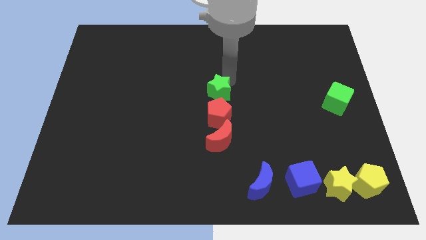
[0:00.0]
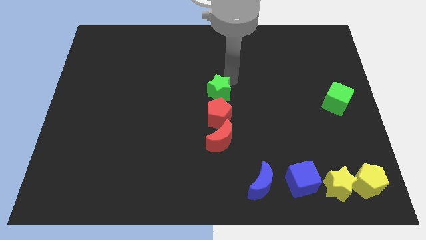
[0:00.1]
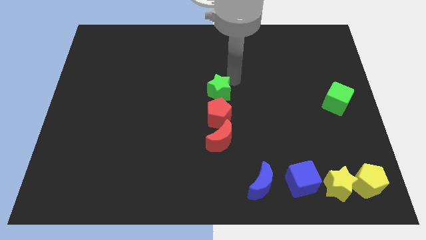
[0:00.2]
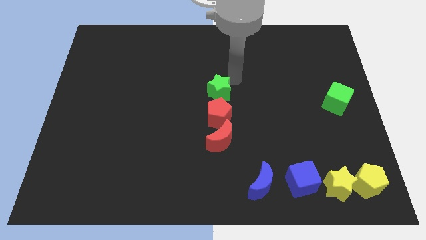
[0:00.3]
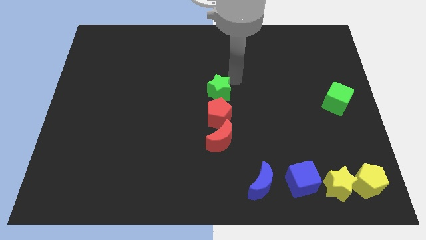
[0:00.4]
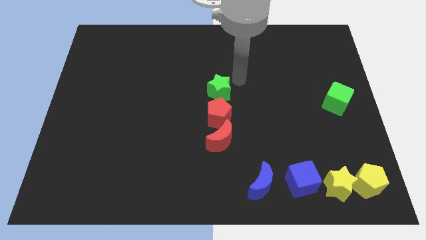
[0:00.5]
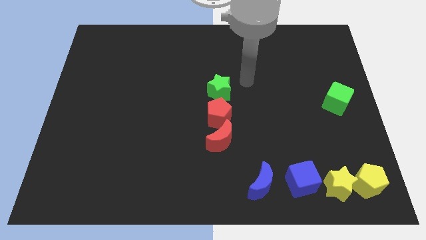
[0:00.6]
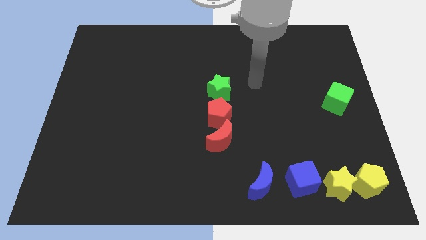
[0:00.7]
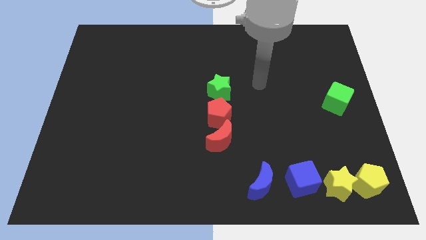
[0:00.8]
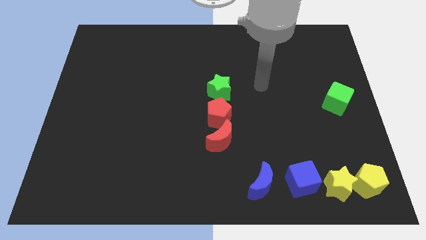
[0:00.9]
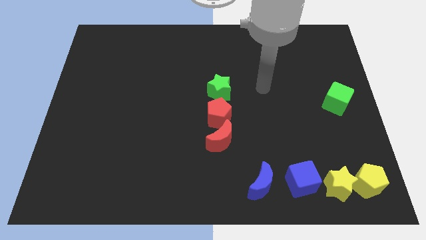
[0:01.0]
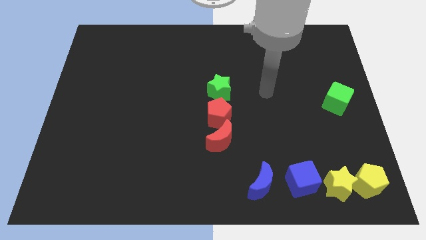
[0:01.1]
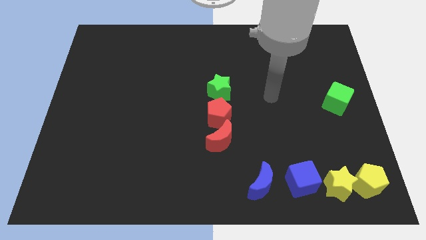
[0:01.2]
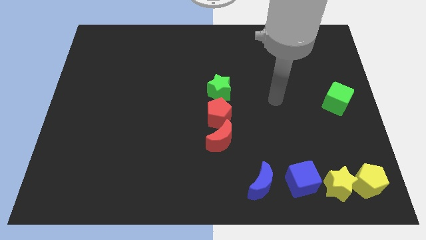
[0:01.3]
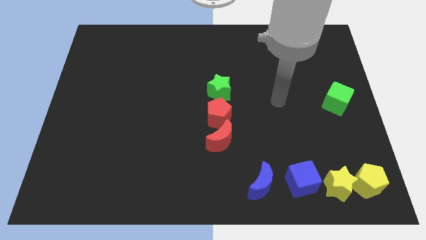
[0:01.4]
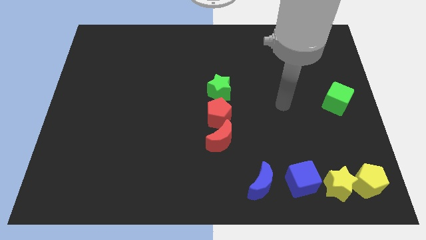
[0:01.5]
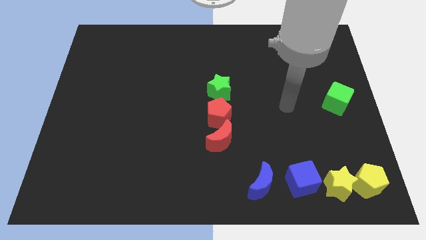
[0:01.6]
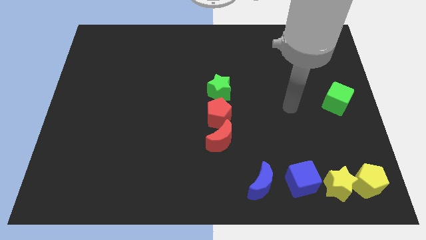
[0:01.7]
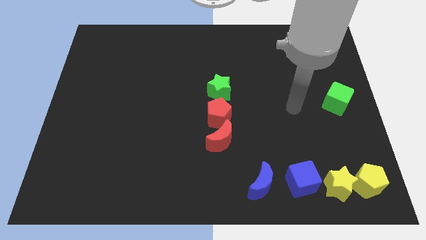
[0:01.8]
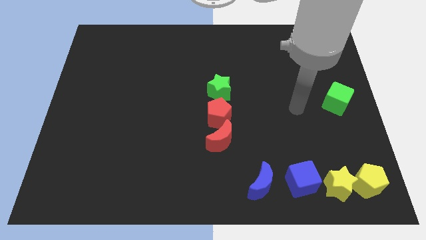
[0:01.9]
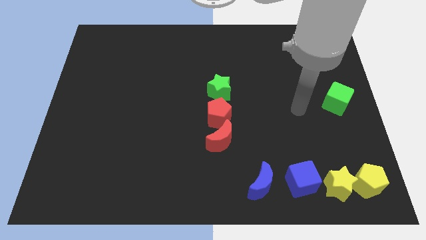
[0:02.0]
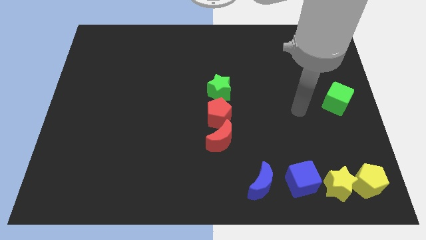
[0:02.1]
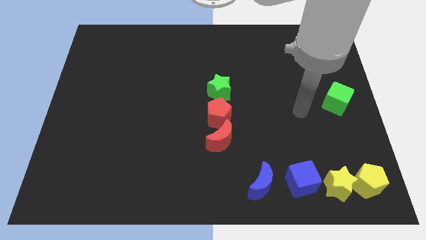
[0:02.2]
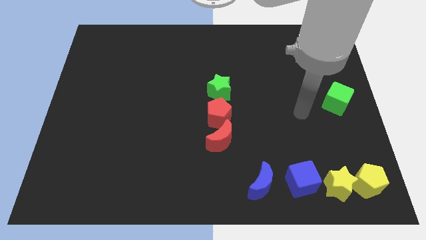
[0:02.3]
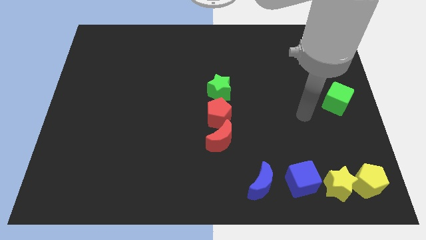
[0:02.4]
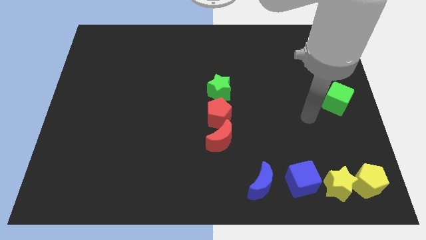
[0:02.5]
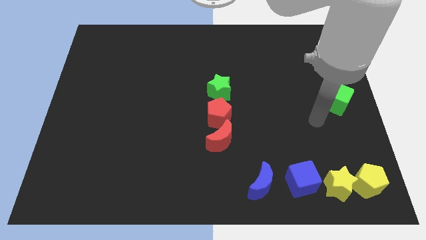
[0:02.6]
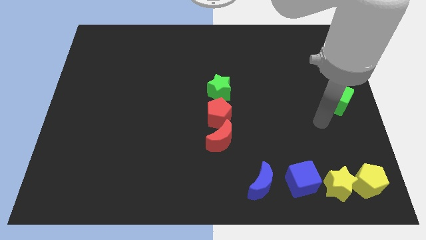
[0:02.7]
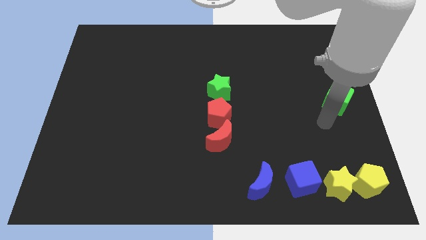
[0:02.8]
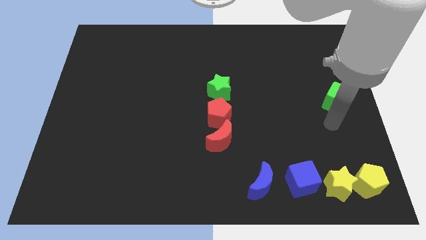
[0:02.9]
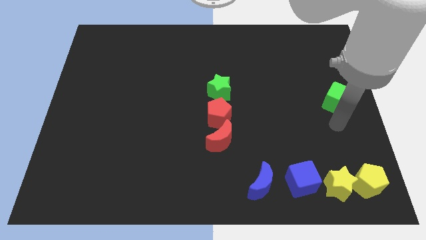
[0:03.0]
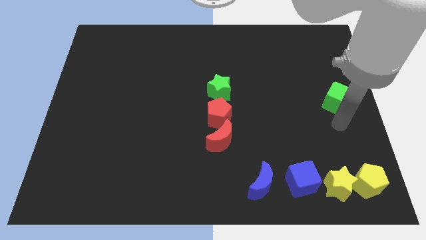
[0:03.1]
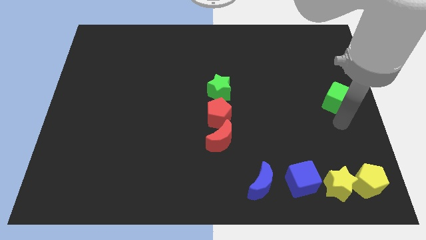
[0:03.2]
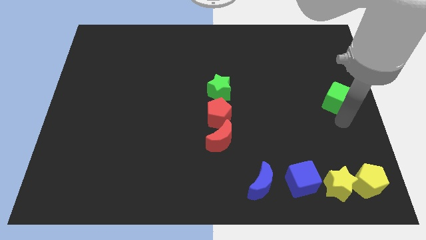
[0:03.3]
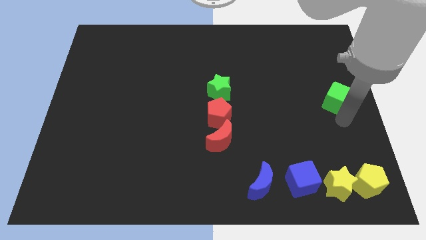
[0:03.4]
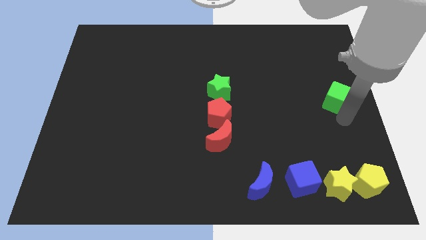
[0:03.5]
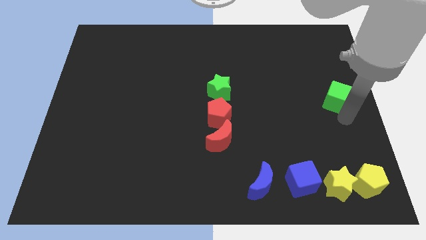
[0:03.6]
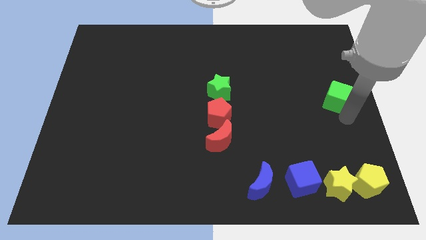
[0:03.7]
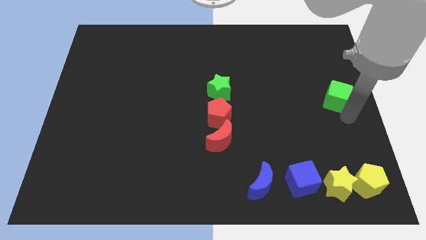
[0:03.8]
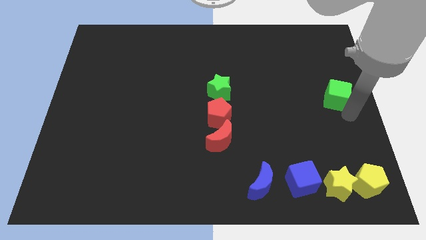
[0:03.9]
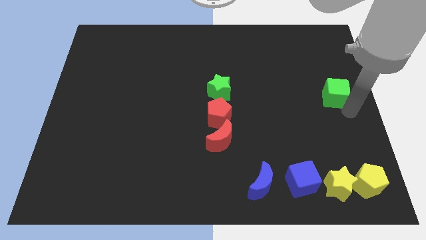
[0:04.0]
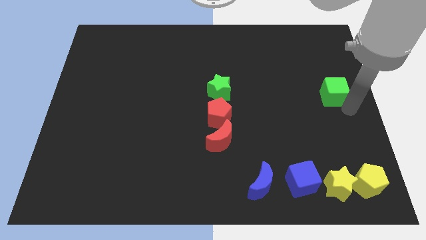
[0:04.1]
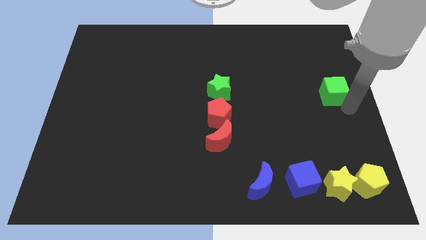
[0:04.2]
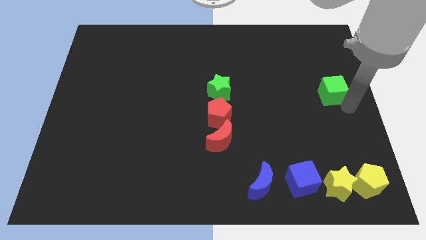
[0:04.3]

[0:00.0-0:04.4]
place the green cube parallel to the green star

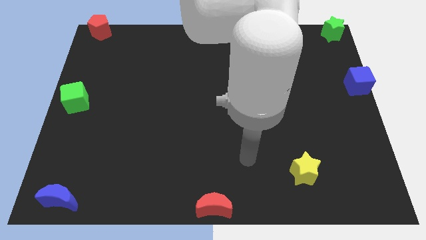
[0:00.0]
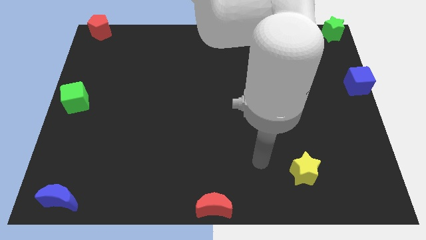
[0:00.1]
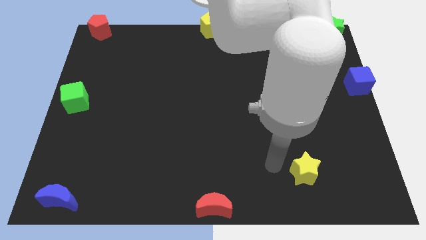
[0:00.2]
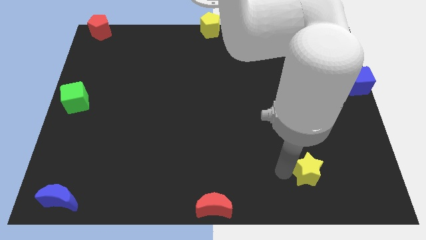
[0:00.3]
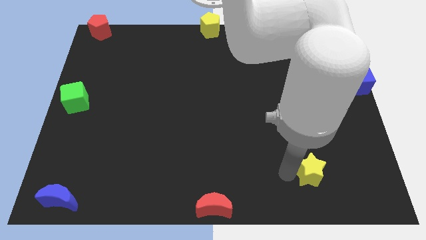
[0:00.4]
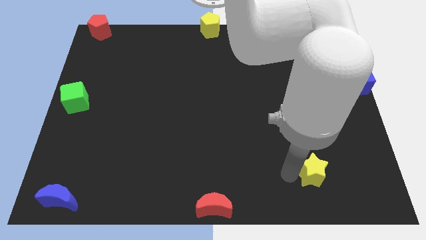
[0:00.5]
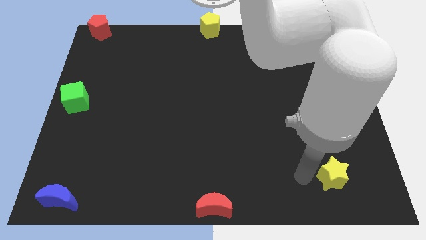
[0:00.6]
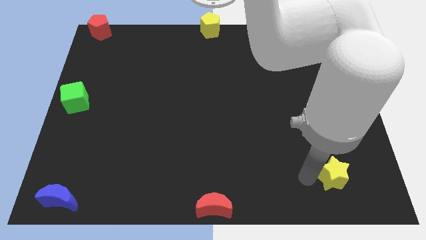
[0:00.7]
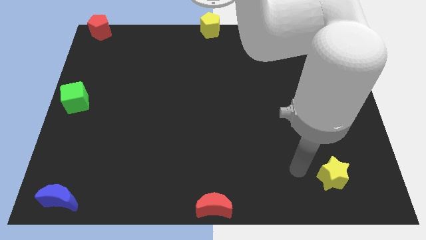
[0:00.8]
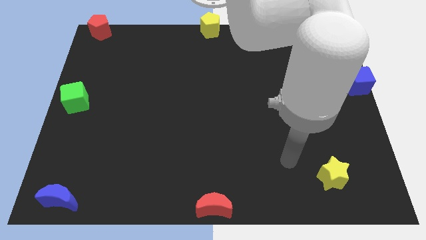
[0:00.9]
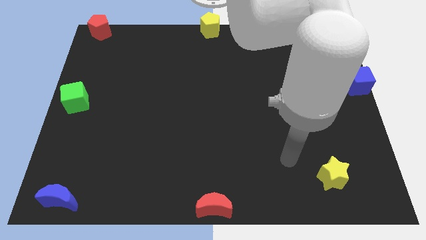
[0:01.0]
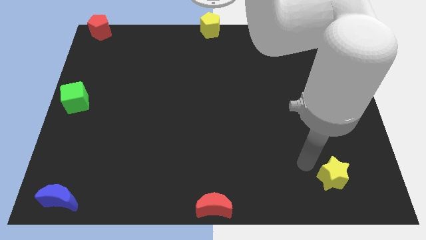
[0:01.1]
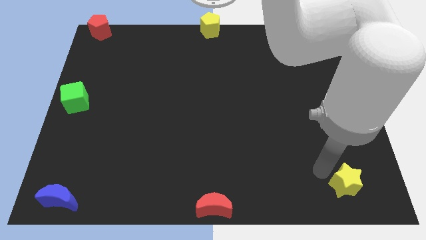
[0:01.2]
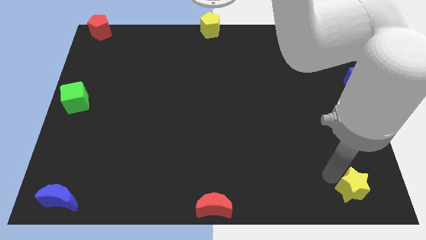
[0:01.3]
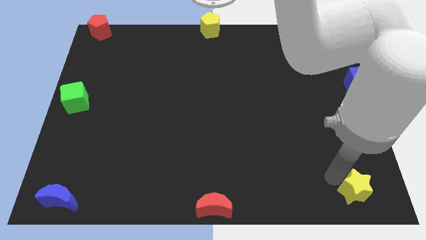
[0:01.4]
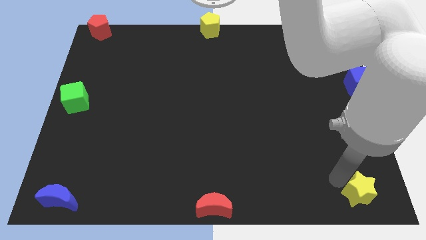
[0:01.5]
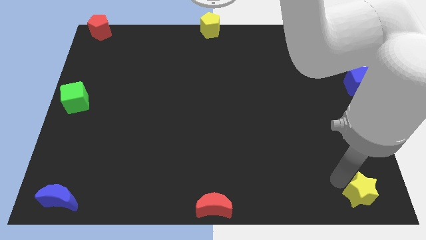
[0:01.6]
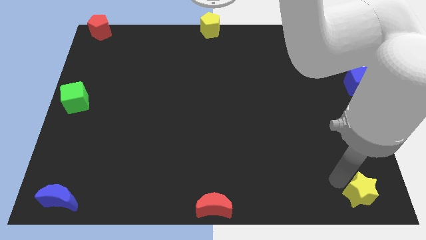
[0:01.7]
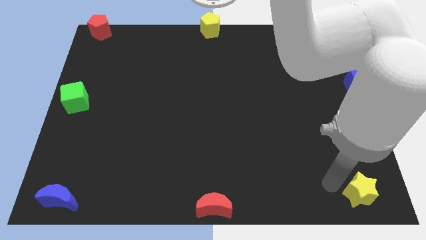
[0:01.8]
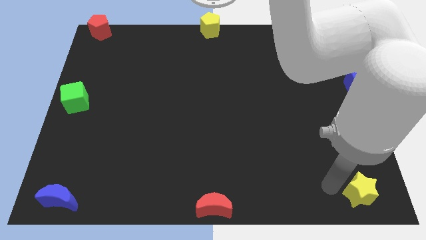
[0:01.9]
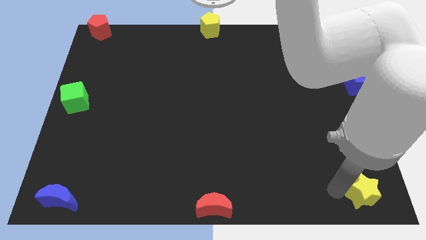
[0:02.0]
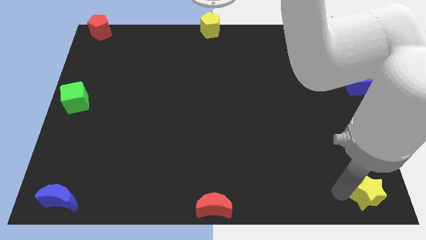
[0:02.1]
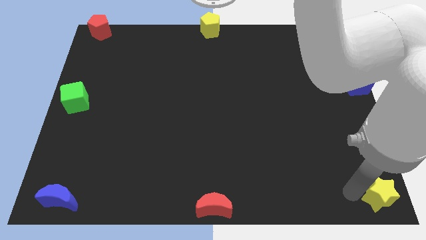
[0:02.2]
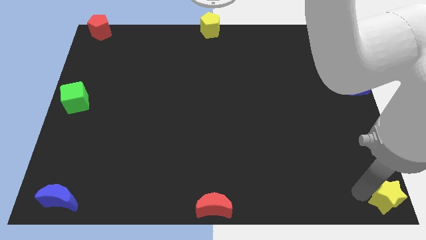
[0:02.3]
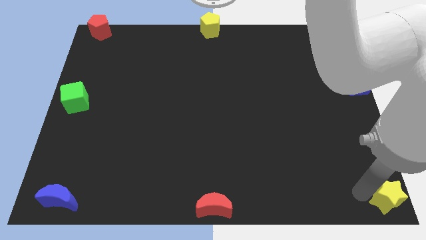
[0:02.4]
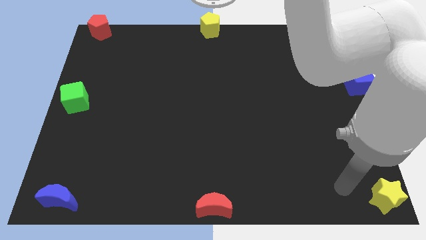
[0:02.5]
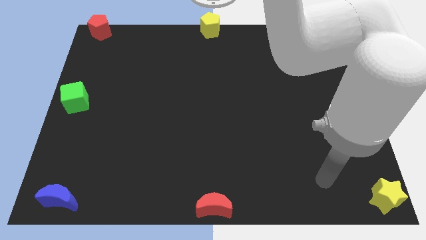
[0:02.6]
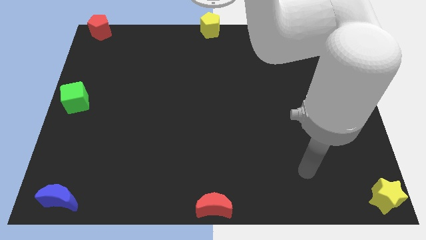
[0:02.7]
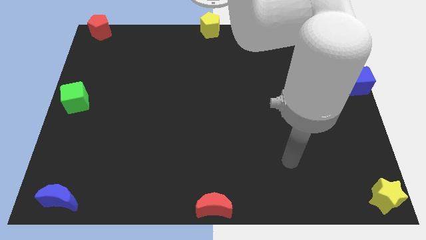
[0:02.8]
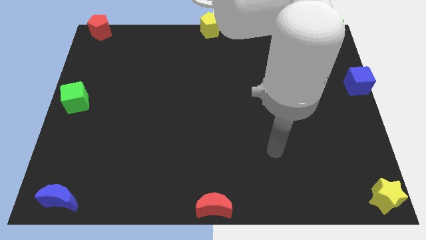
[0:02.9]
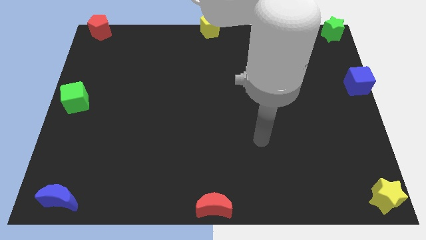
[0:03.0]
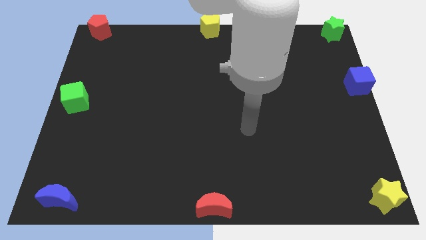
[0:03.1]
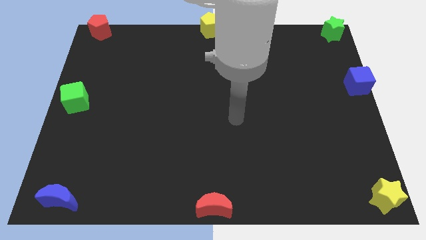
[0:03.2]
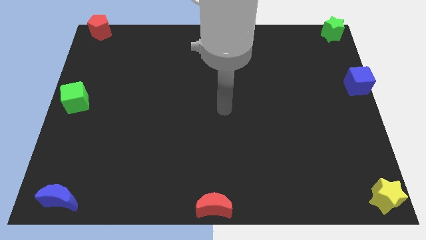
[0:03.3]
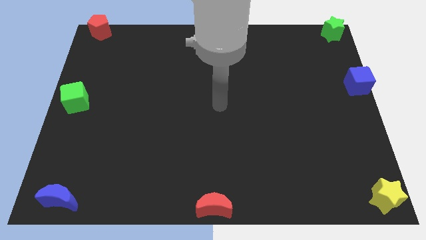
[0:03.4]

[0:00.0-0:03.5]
push the yellow star to the bottom right corner of the board

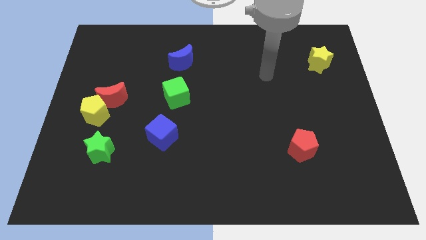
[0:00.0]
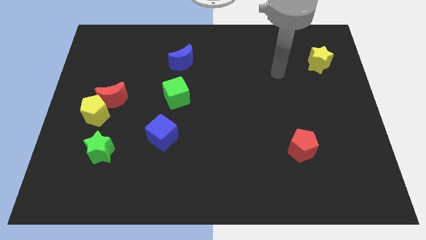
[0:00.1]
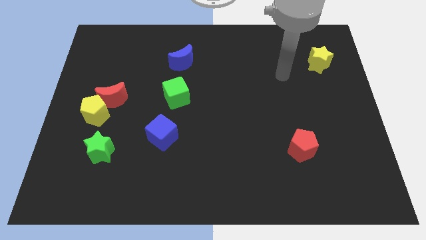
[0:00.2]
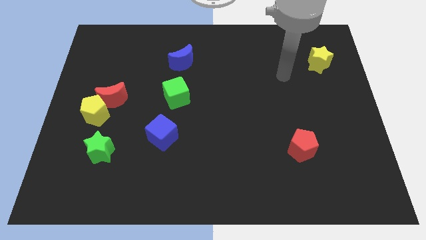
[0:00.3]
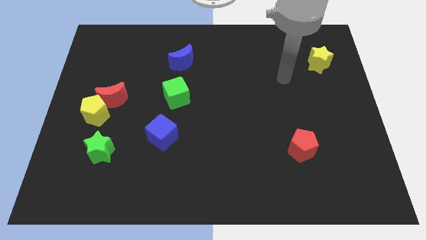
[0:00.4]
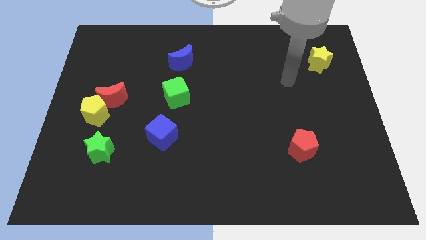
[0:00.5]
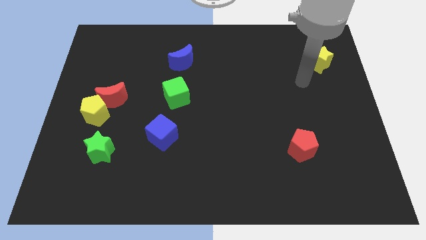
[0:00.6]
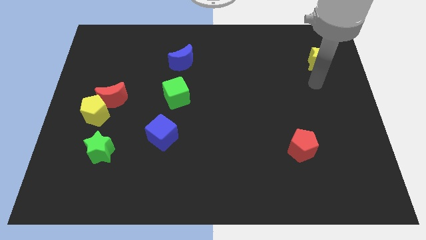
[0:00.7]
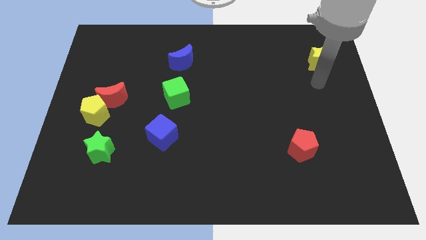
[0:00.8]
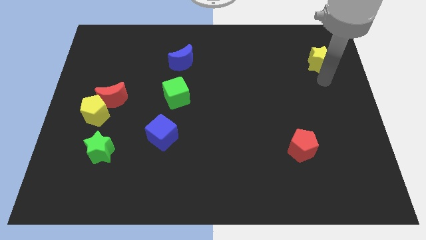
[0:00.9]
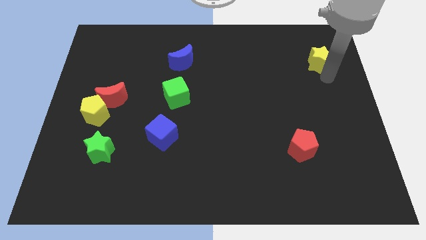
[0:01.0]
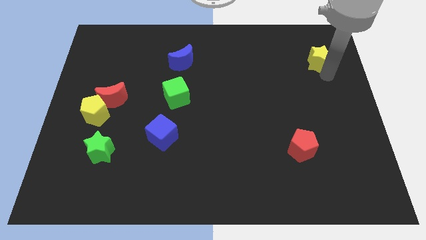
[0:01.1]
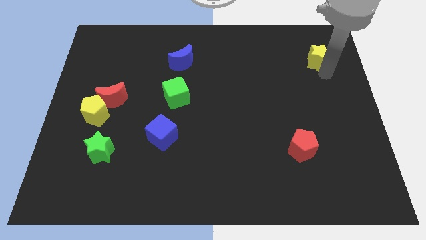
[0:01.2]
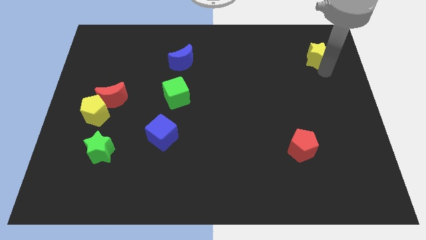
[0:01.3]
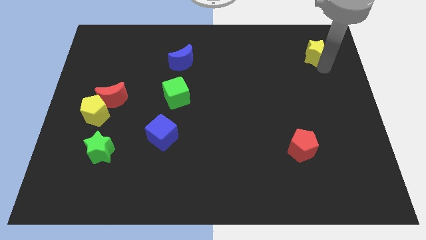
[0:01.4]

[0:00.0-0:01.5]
touch the yellow star
